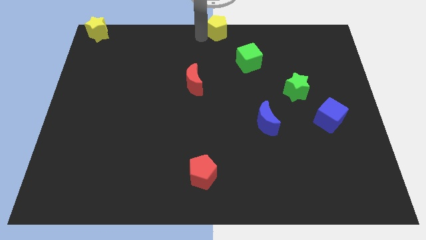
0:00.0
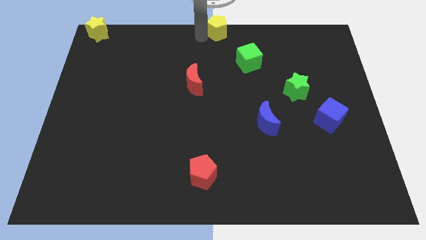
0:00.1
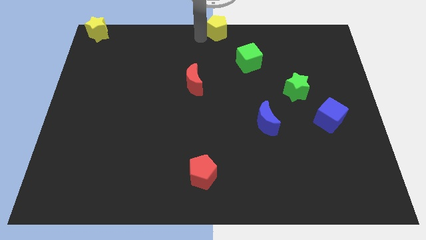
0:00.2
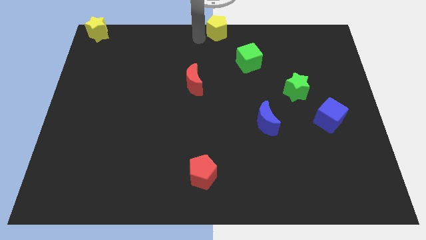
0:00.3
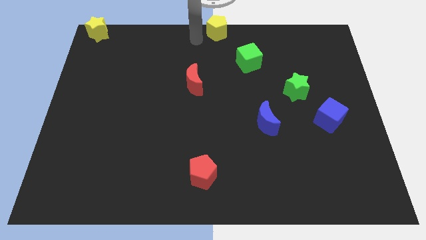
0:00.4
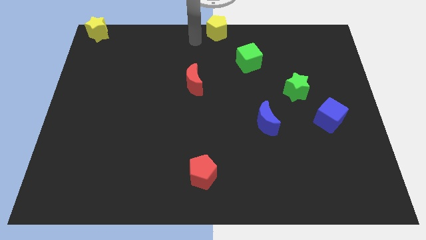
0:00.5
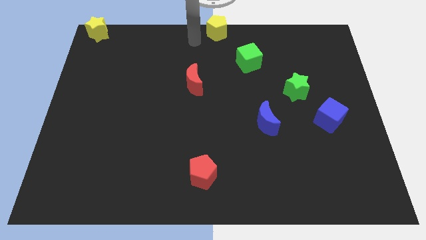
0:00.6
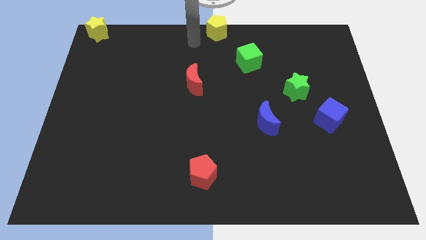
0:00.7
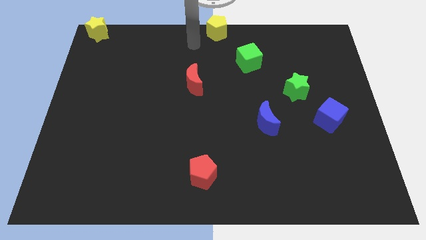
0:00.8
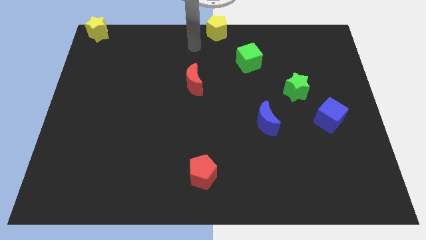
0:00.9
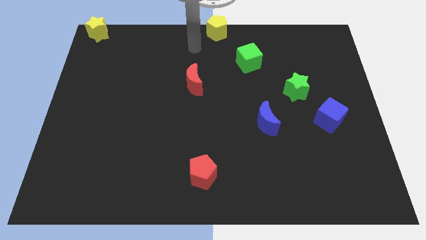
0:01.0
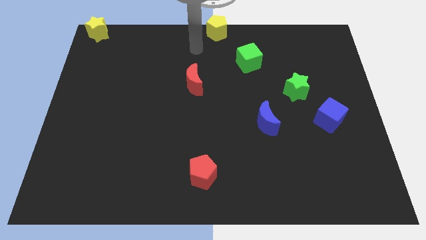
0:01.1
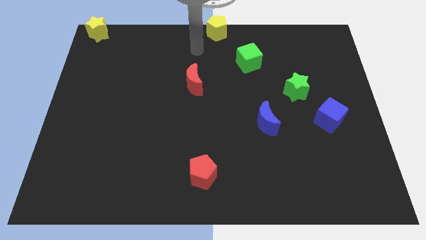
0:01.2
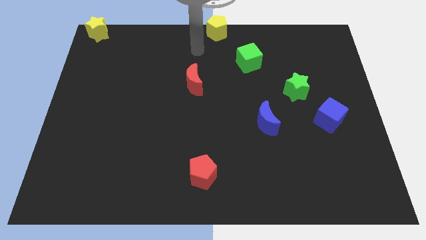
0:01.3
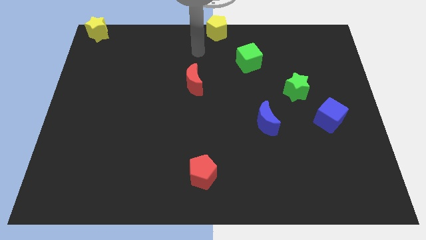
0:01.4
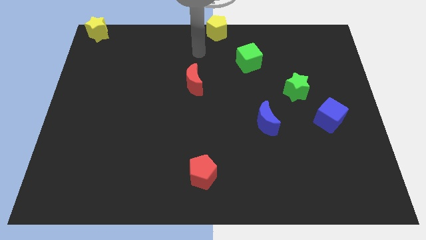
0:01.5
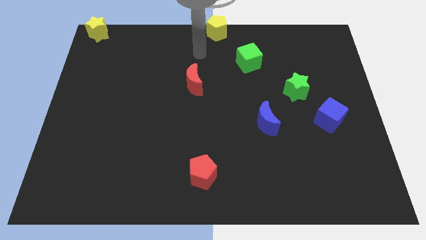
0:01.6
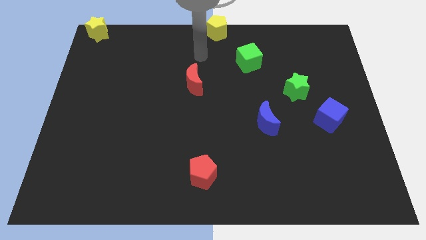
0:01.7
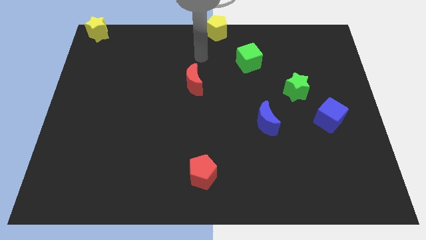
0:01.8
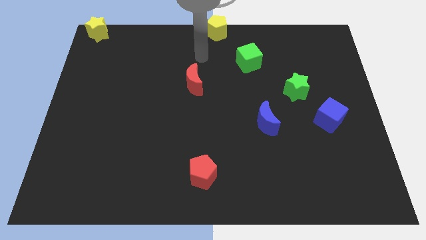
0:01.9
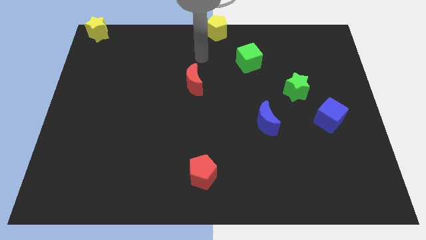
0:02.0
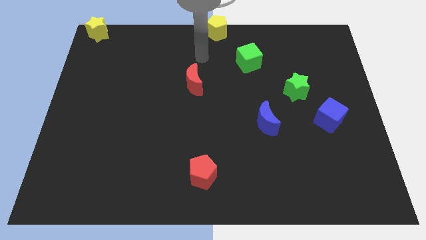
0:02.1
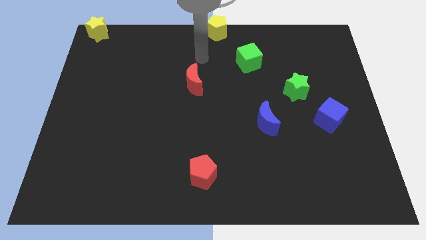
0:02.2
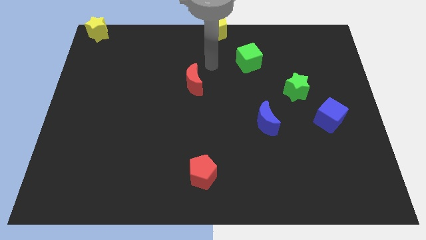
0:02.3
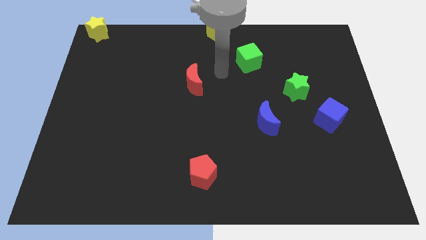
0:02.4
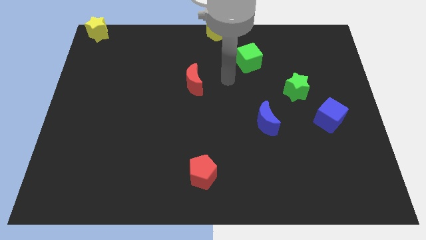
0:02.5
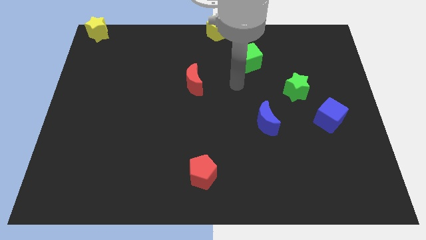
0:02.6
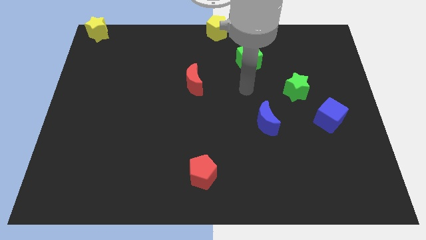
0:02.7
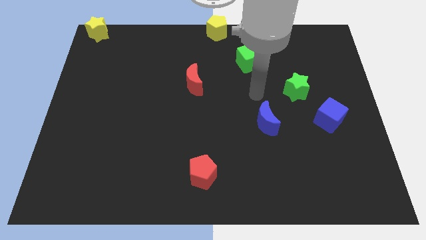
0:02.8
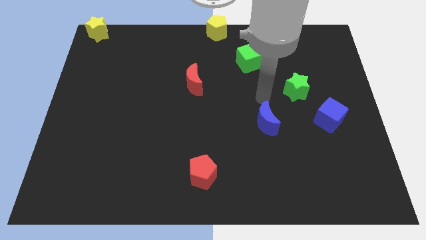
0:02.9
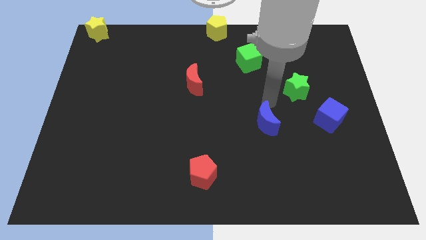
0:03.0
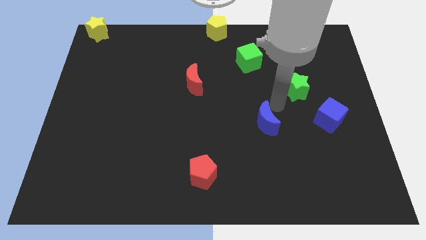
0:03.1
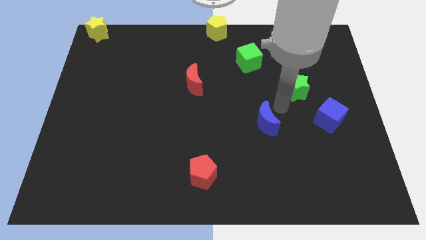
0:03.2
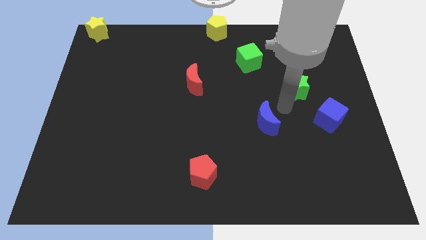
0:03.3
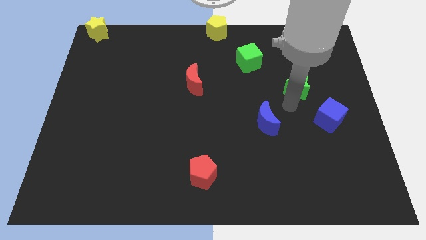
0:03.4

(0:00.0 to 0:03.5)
push the arm in between the green star and blue moon

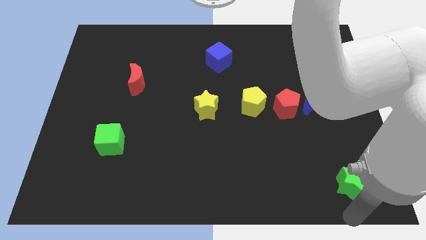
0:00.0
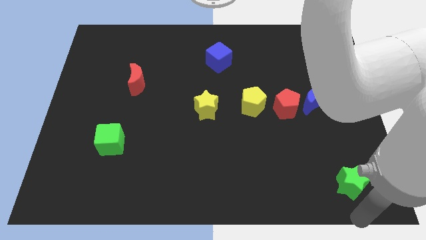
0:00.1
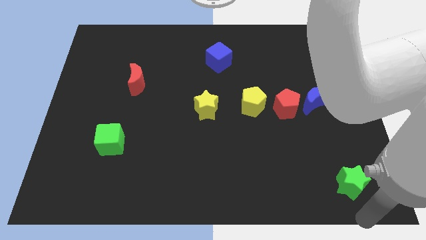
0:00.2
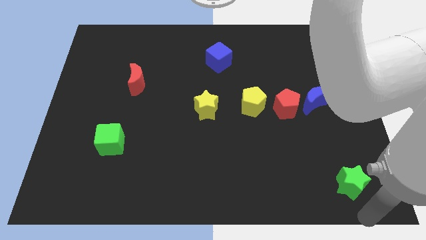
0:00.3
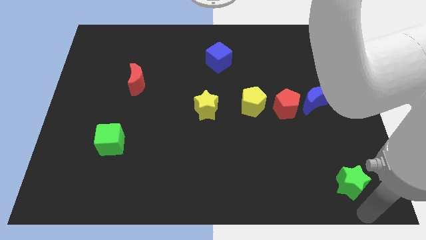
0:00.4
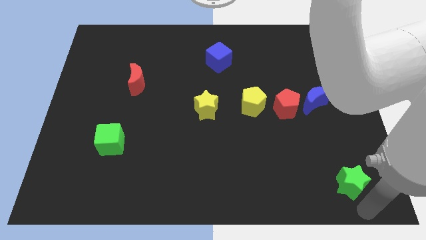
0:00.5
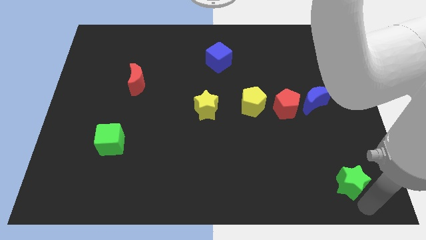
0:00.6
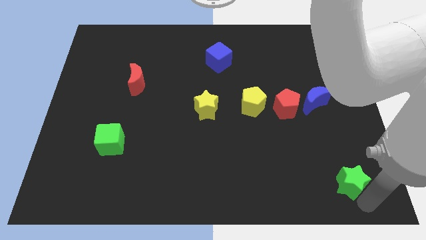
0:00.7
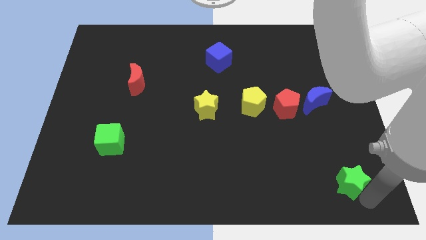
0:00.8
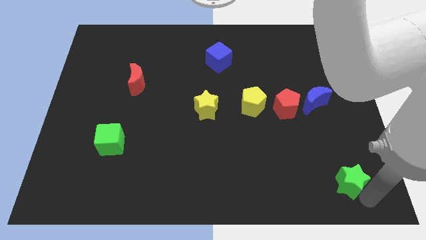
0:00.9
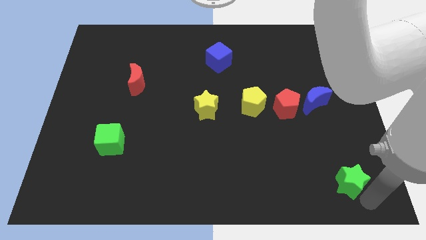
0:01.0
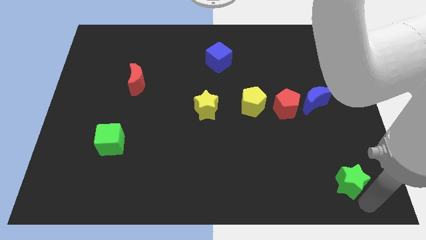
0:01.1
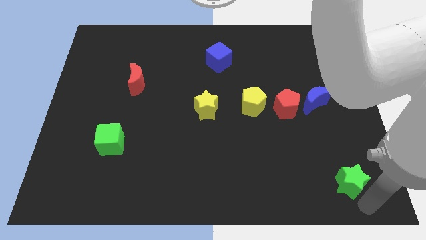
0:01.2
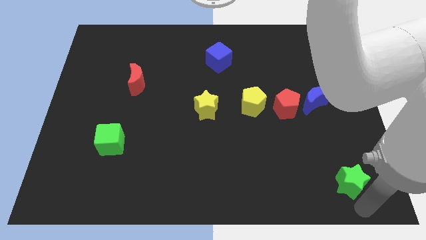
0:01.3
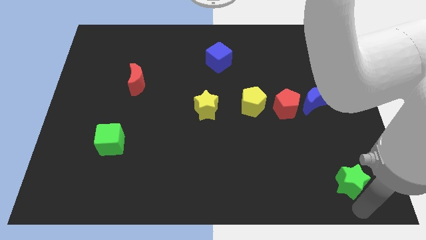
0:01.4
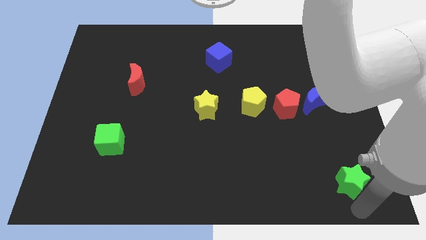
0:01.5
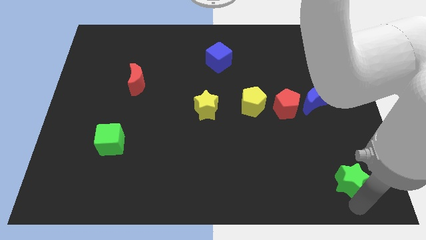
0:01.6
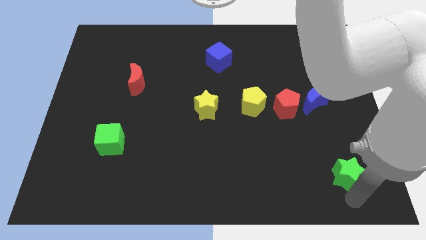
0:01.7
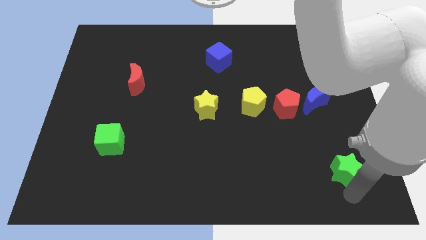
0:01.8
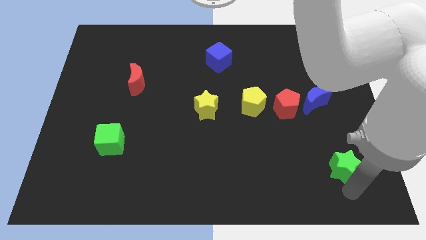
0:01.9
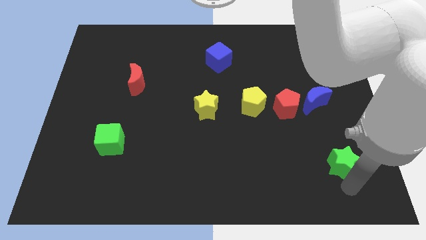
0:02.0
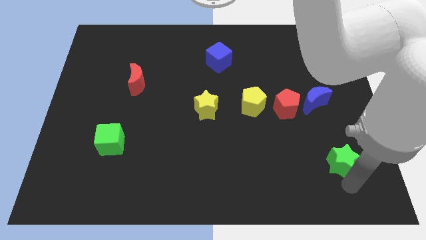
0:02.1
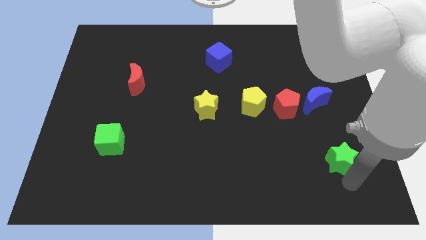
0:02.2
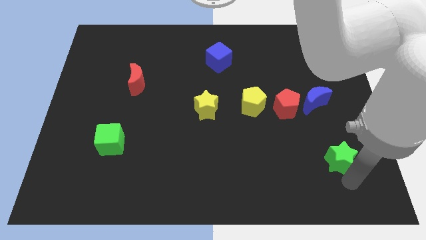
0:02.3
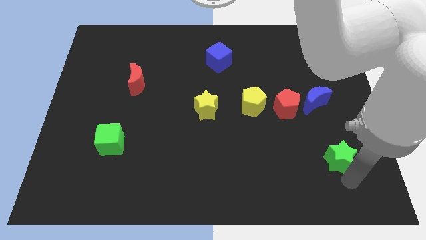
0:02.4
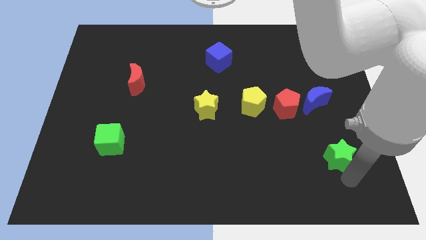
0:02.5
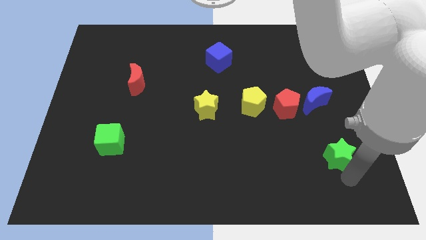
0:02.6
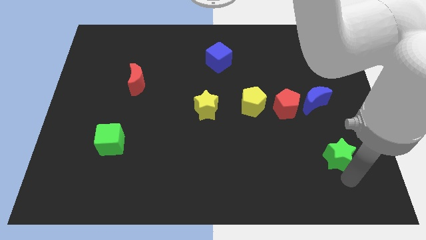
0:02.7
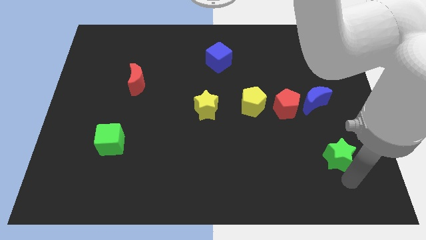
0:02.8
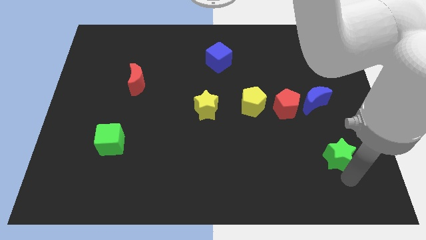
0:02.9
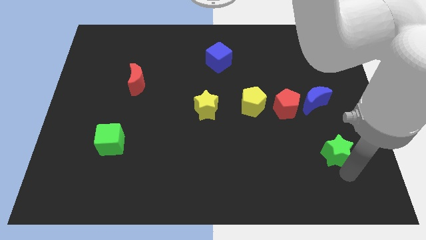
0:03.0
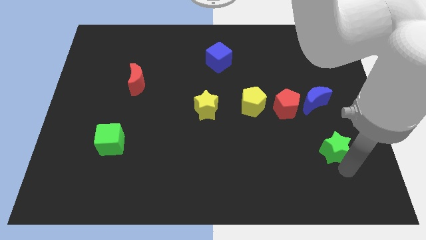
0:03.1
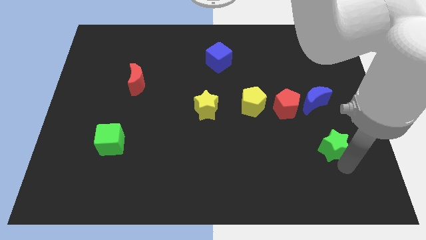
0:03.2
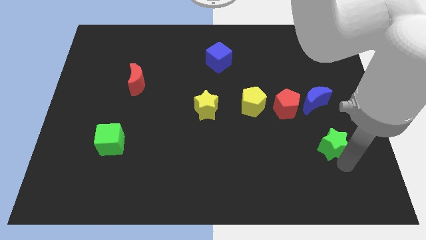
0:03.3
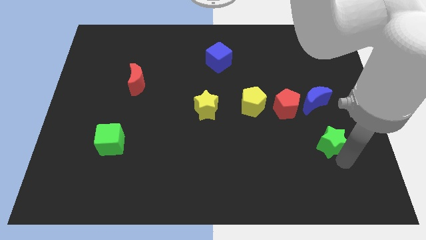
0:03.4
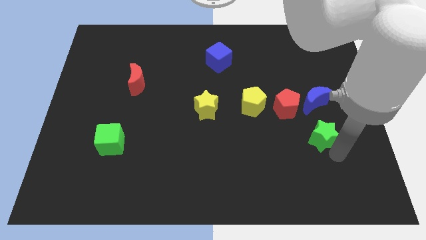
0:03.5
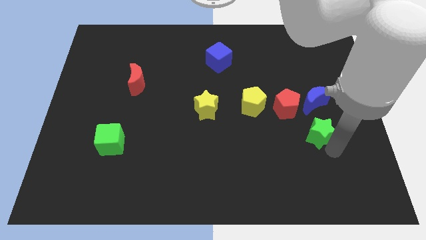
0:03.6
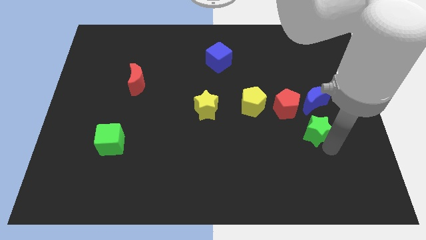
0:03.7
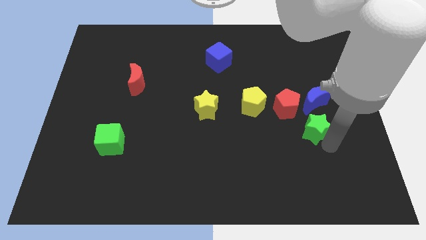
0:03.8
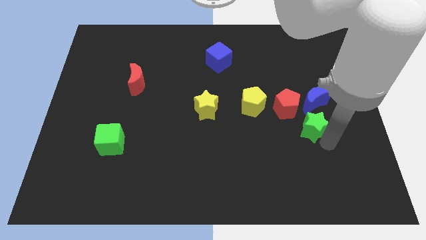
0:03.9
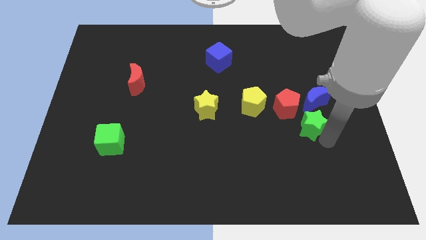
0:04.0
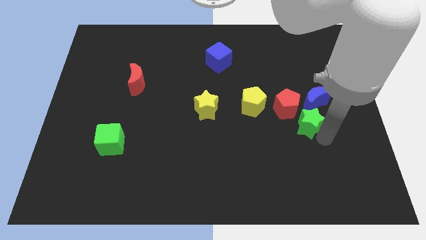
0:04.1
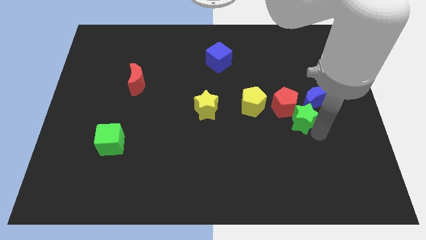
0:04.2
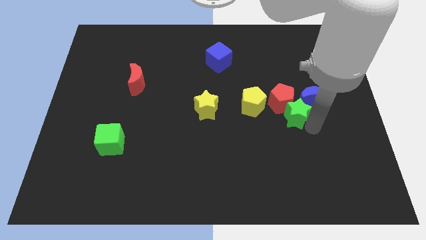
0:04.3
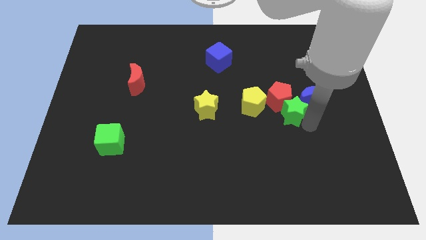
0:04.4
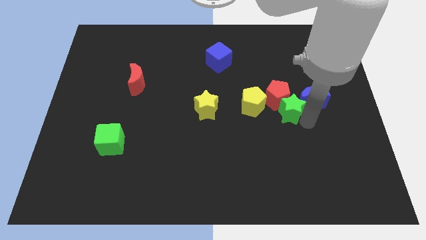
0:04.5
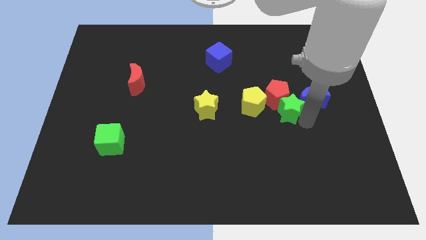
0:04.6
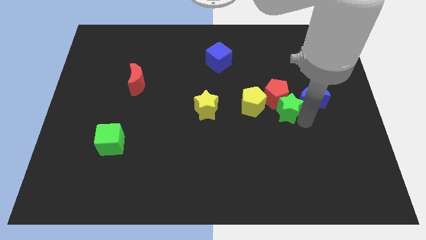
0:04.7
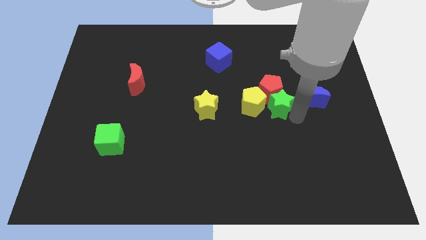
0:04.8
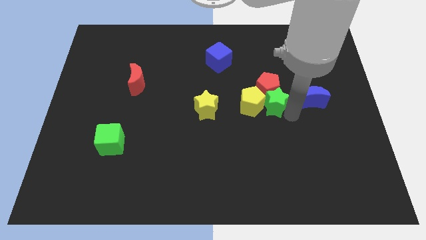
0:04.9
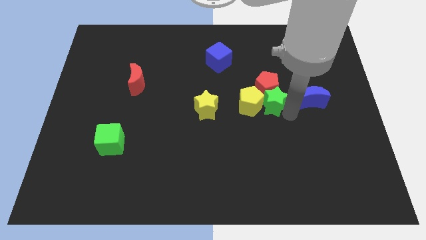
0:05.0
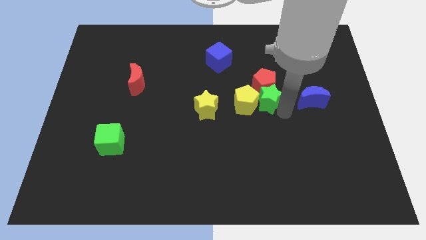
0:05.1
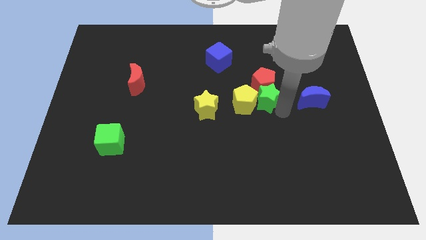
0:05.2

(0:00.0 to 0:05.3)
move the green star in between red pentagon and blue crescent
